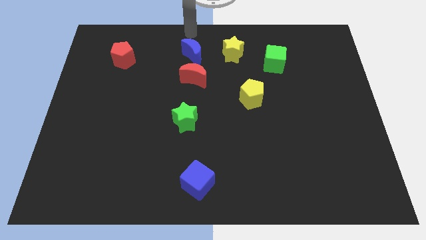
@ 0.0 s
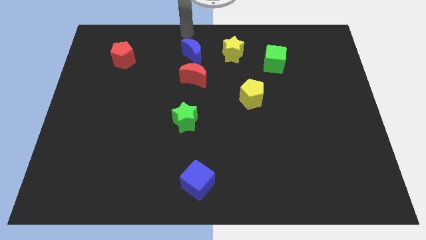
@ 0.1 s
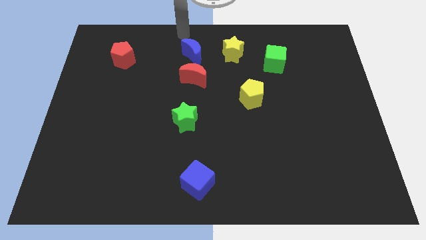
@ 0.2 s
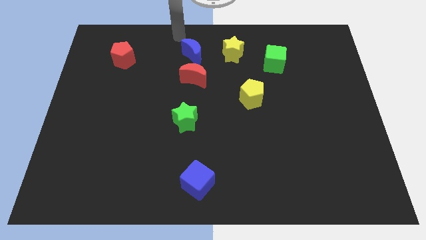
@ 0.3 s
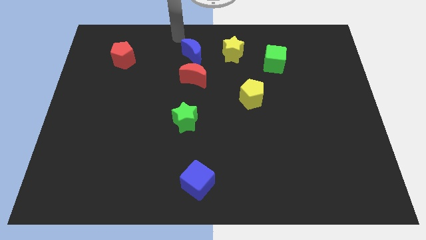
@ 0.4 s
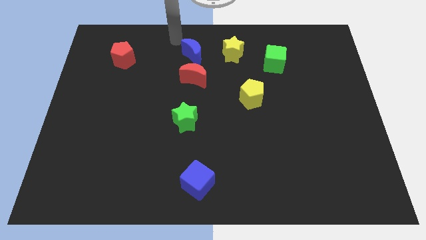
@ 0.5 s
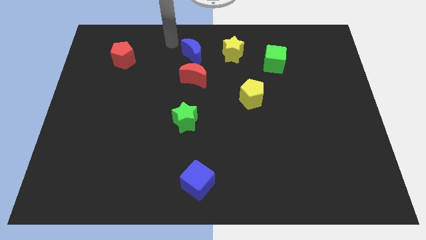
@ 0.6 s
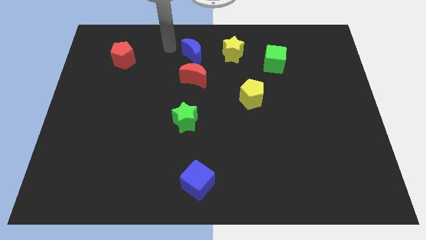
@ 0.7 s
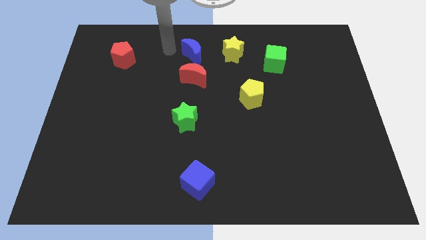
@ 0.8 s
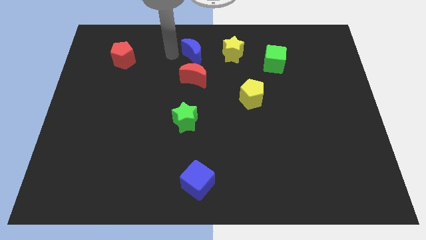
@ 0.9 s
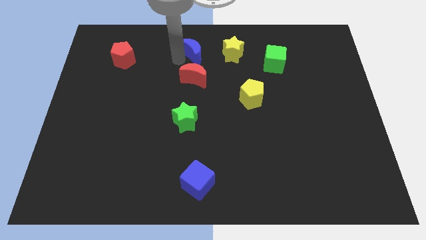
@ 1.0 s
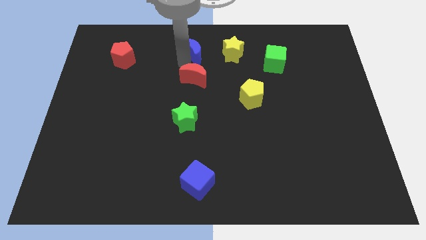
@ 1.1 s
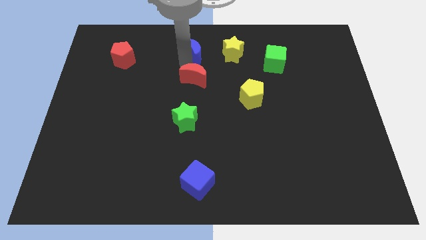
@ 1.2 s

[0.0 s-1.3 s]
move your arm towards the red crescent

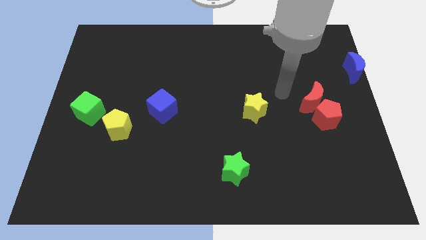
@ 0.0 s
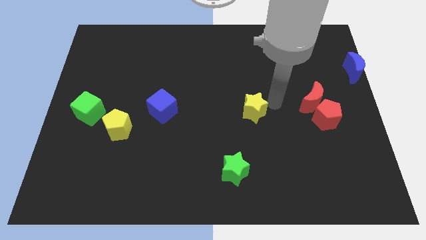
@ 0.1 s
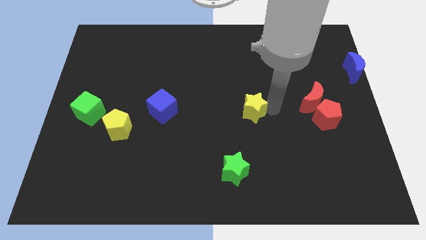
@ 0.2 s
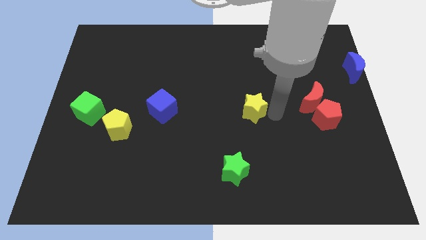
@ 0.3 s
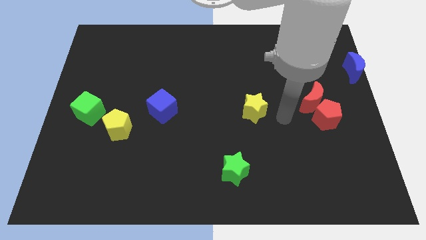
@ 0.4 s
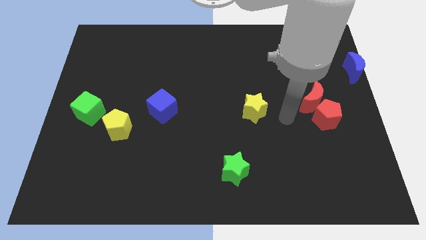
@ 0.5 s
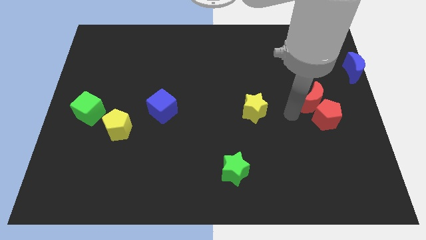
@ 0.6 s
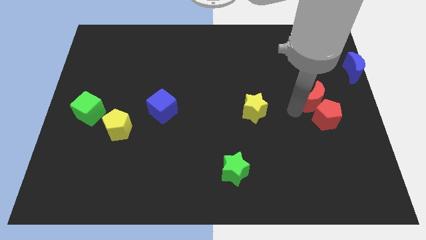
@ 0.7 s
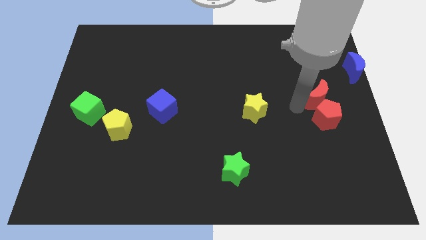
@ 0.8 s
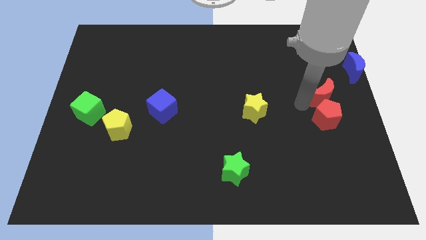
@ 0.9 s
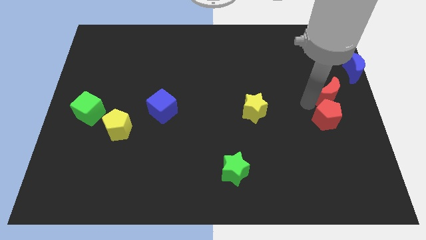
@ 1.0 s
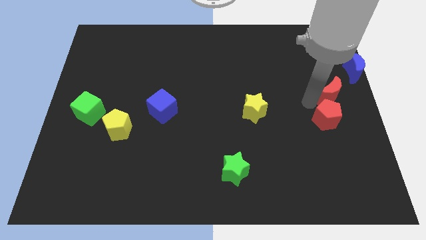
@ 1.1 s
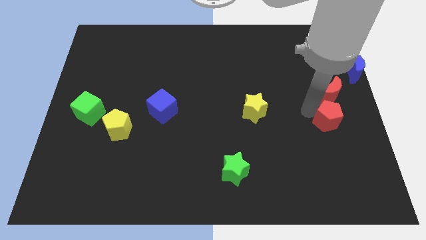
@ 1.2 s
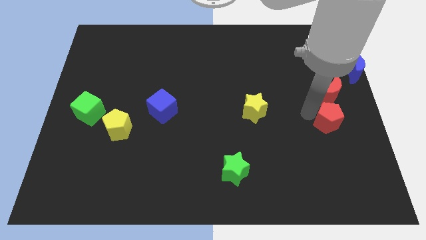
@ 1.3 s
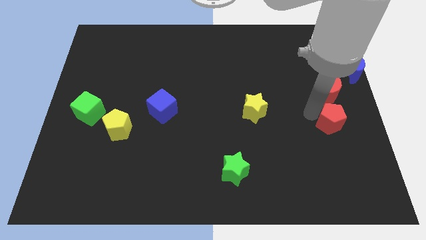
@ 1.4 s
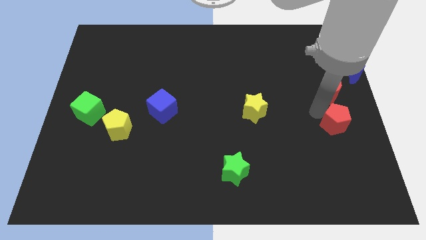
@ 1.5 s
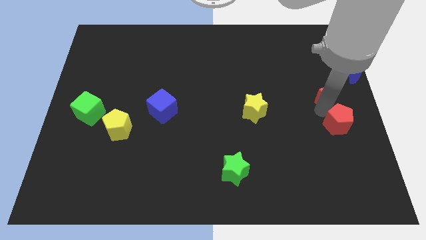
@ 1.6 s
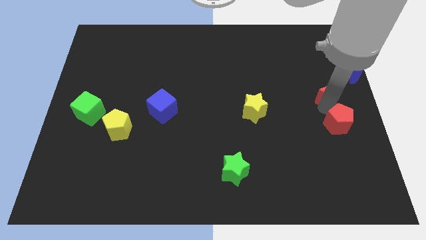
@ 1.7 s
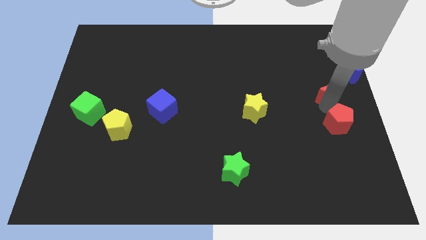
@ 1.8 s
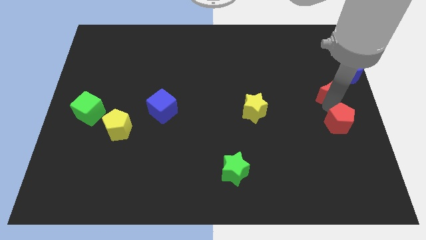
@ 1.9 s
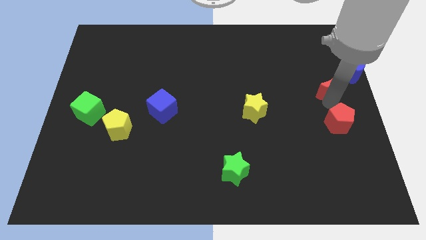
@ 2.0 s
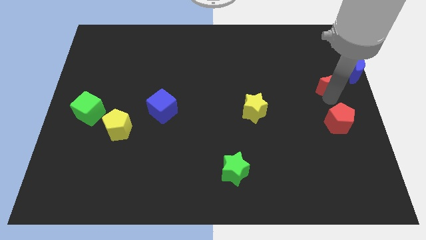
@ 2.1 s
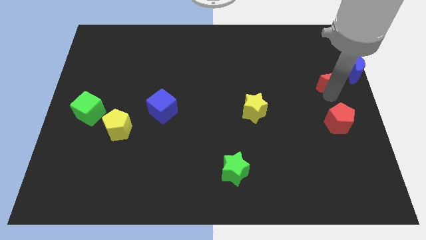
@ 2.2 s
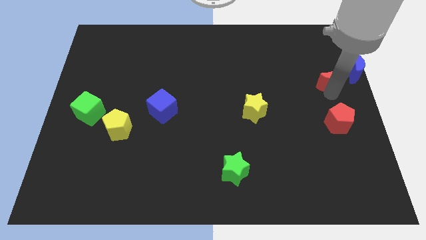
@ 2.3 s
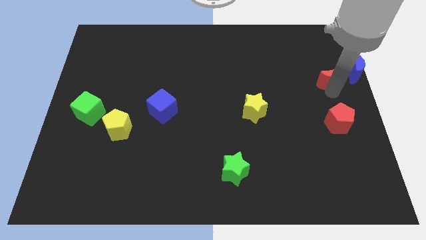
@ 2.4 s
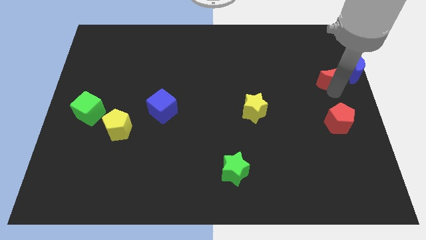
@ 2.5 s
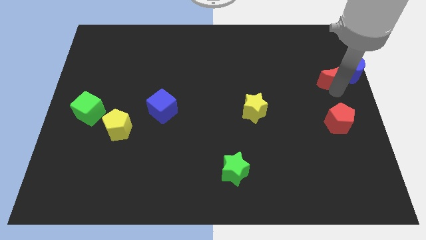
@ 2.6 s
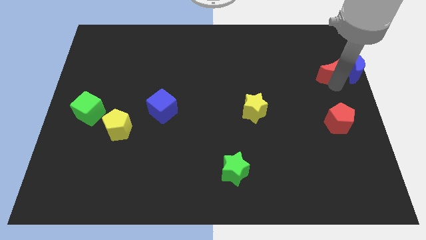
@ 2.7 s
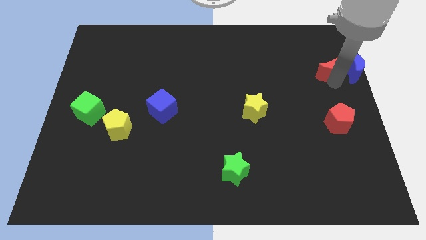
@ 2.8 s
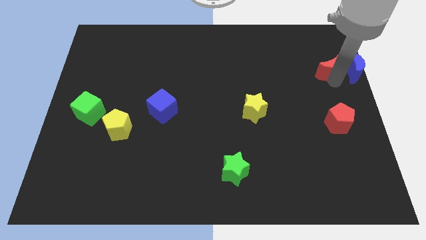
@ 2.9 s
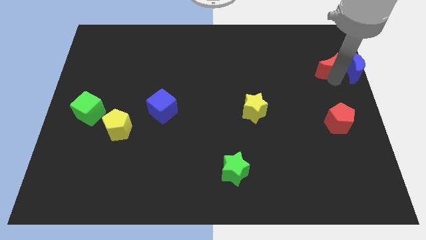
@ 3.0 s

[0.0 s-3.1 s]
put the red crescent to the left of the blue crescent

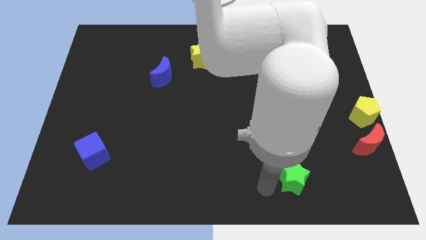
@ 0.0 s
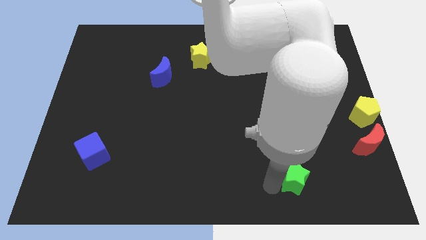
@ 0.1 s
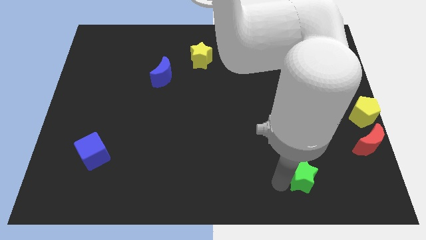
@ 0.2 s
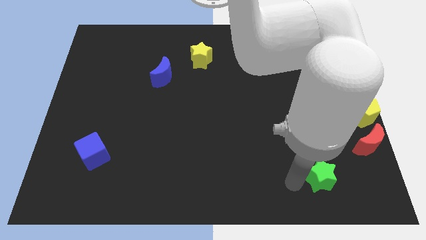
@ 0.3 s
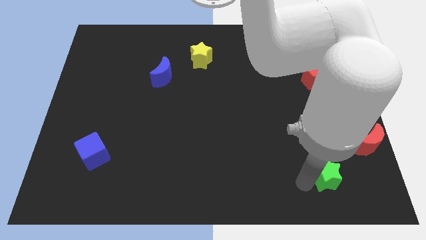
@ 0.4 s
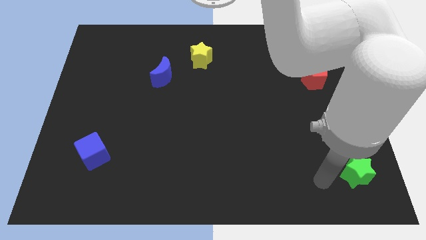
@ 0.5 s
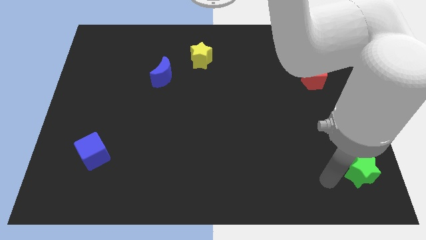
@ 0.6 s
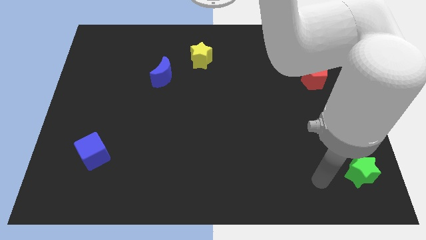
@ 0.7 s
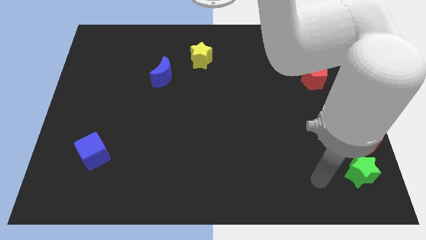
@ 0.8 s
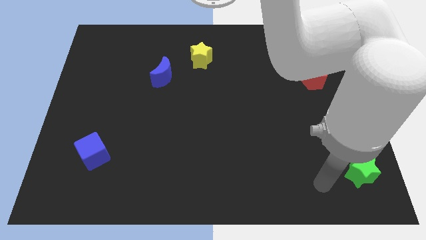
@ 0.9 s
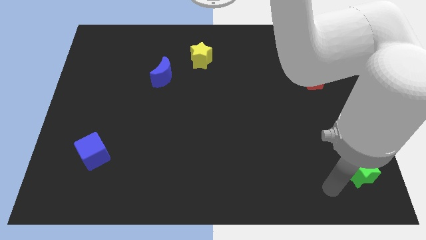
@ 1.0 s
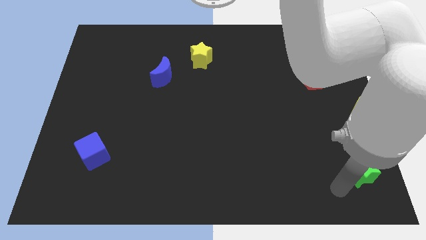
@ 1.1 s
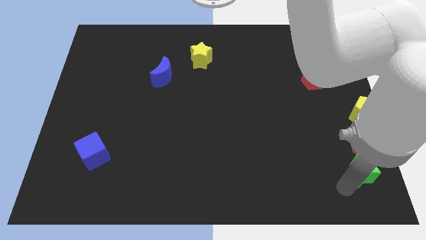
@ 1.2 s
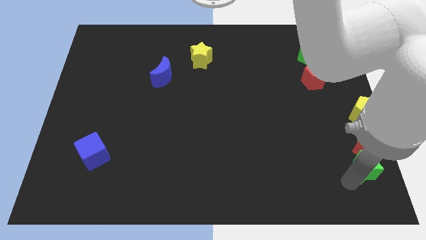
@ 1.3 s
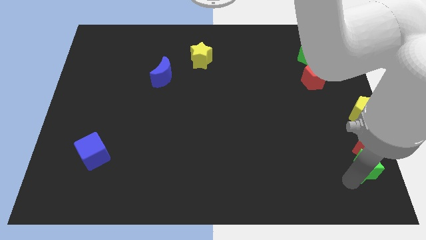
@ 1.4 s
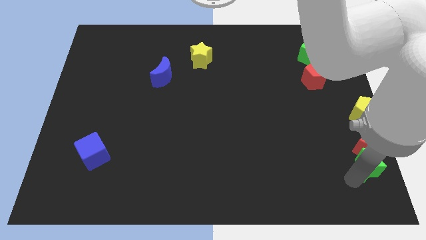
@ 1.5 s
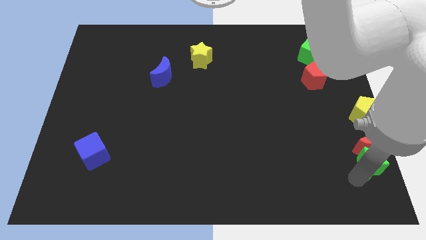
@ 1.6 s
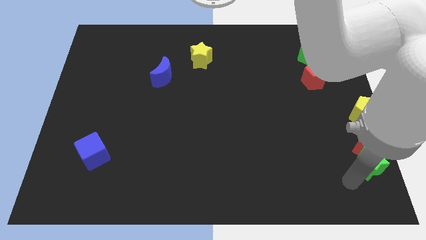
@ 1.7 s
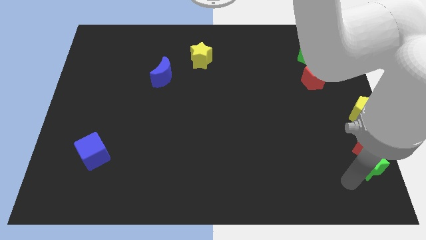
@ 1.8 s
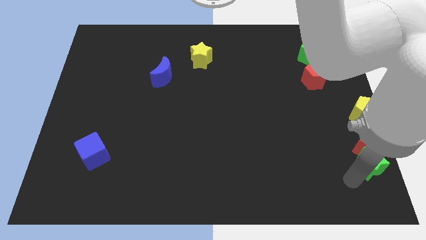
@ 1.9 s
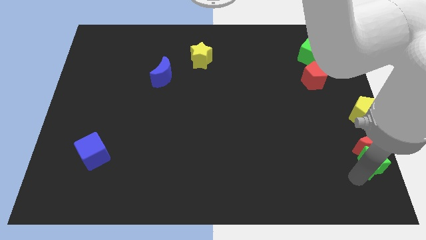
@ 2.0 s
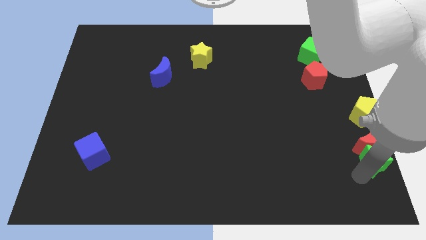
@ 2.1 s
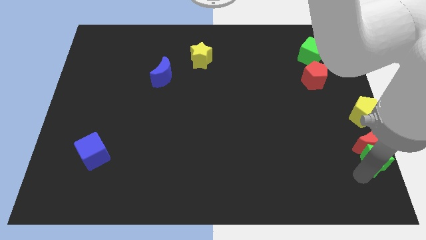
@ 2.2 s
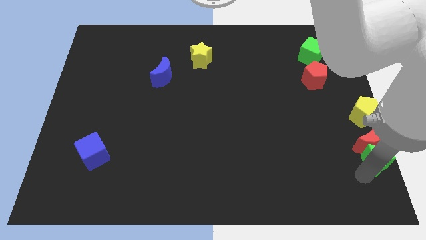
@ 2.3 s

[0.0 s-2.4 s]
push the green star below to the red moon

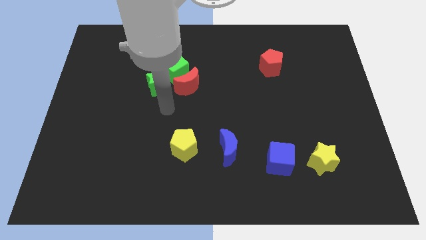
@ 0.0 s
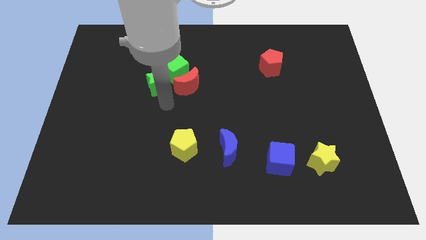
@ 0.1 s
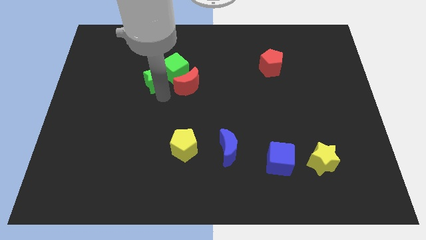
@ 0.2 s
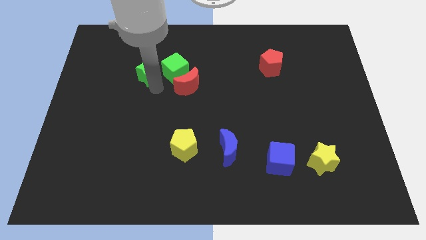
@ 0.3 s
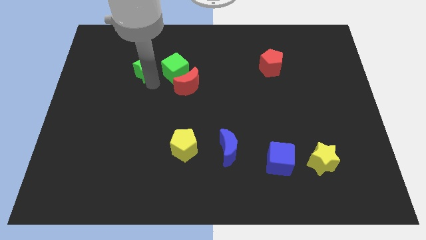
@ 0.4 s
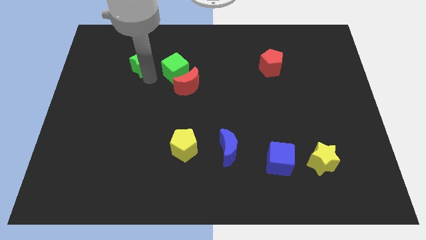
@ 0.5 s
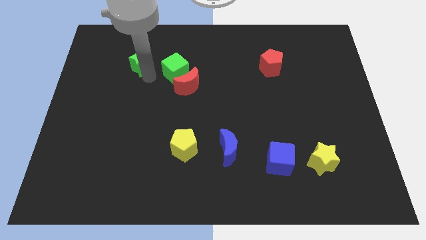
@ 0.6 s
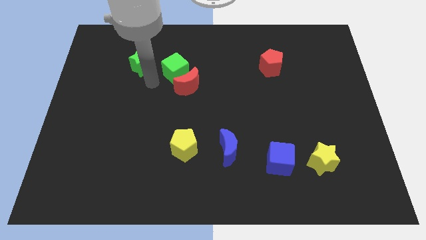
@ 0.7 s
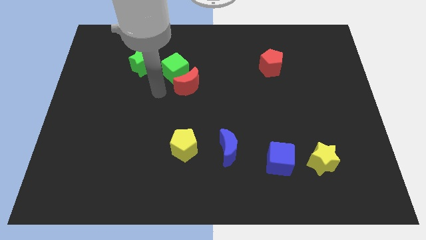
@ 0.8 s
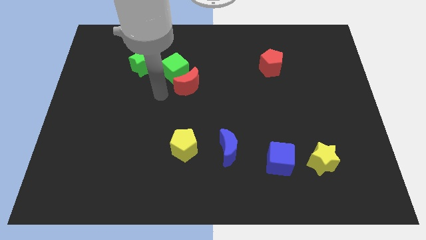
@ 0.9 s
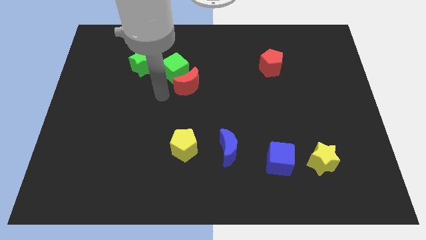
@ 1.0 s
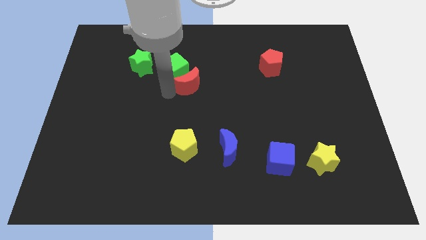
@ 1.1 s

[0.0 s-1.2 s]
push green star upwards diagonally

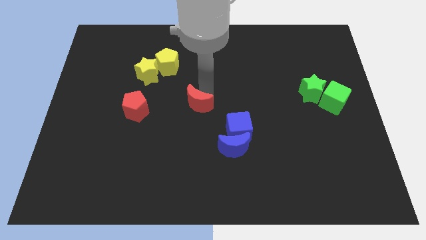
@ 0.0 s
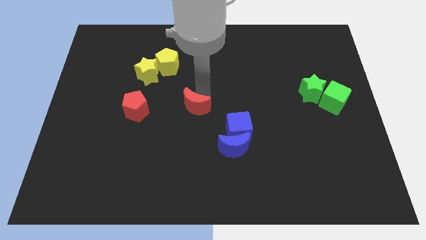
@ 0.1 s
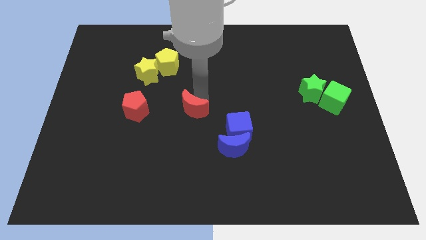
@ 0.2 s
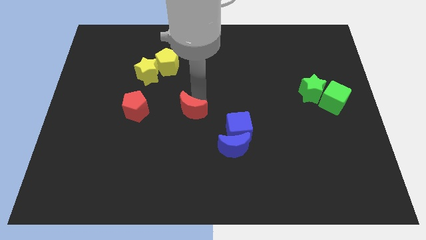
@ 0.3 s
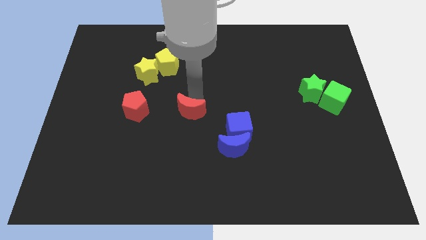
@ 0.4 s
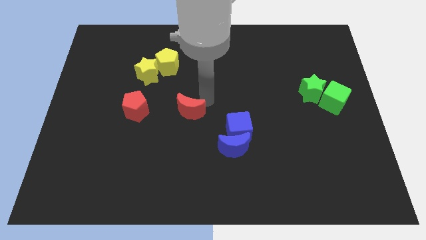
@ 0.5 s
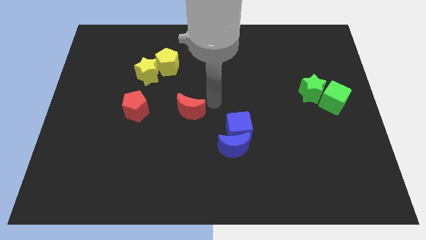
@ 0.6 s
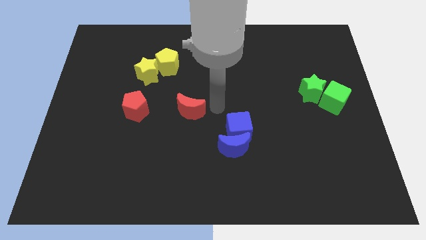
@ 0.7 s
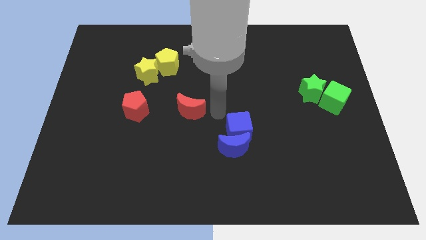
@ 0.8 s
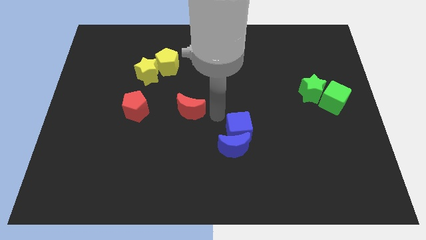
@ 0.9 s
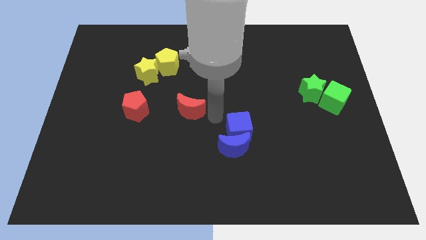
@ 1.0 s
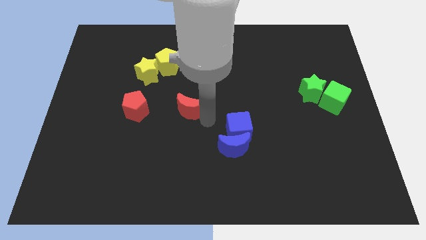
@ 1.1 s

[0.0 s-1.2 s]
place the red moon to the right of the red pentagon
